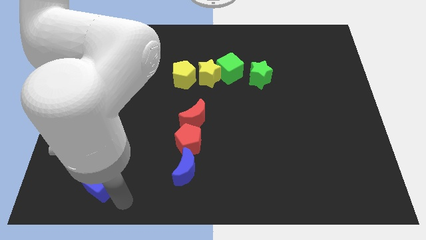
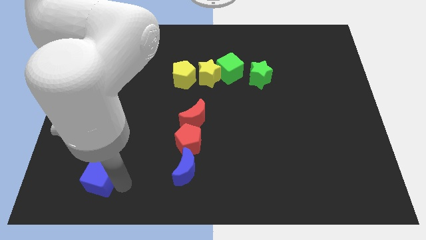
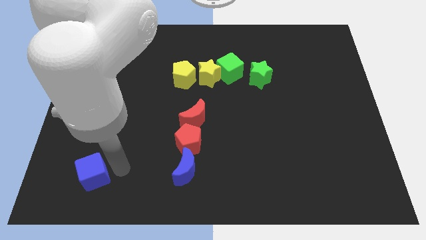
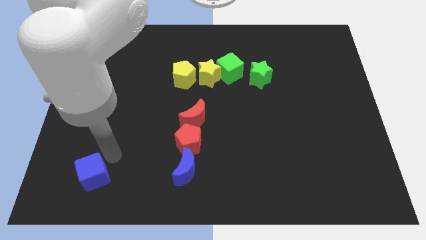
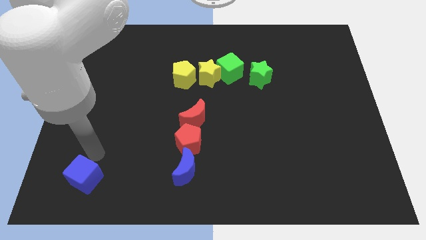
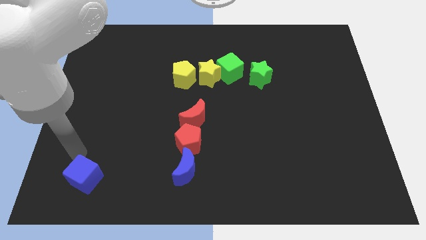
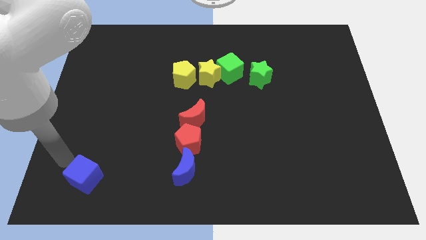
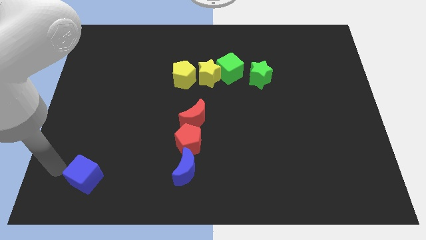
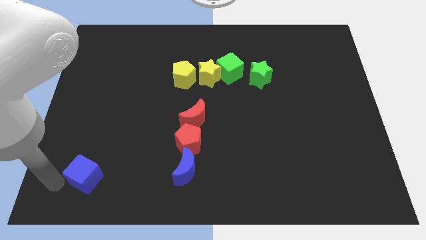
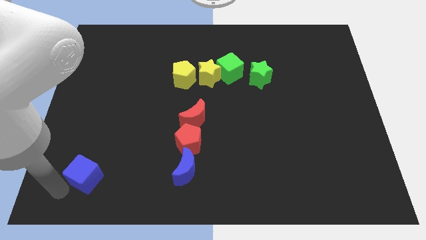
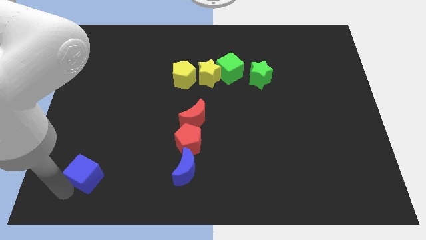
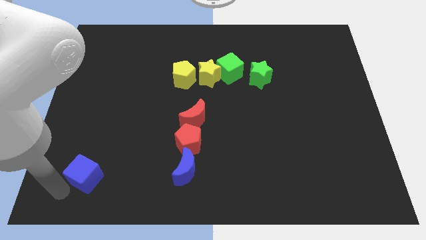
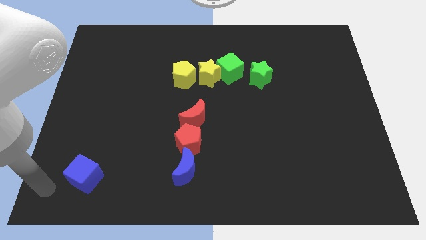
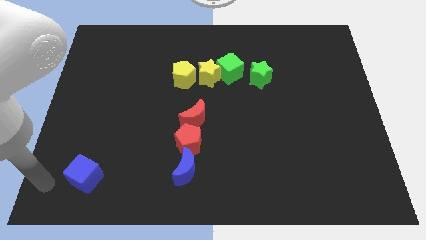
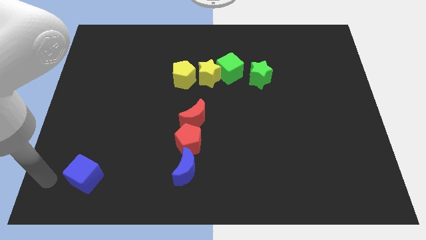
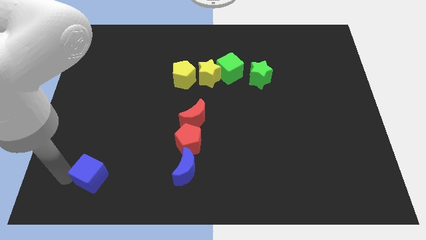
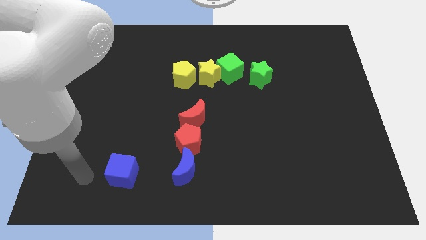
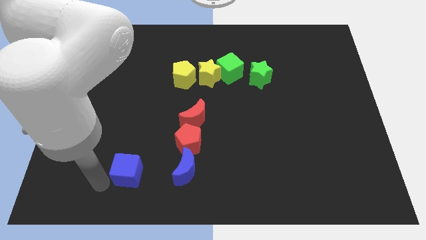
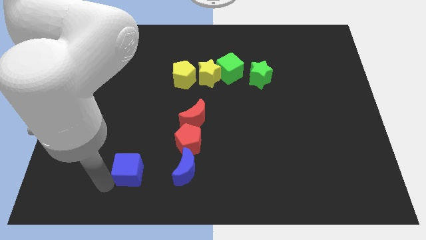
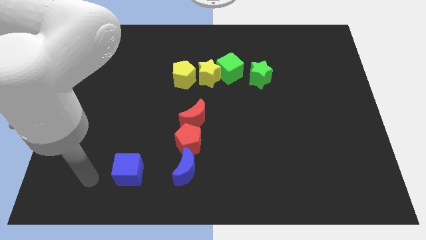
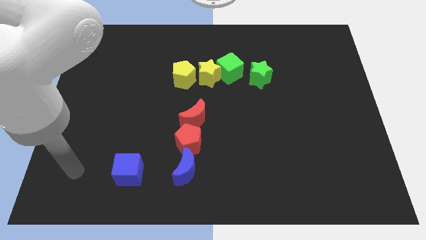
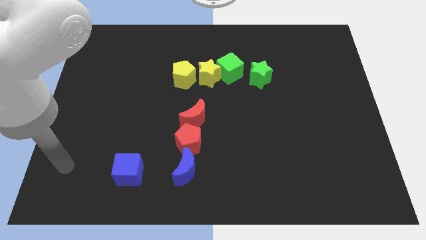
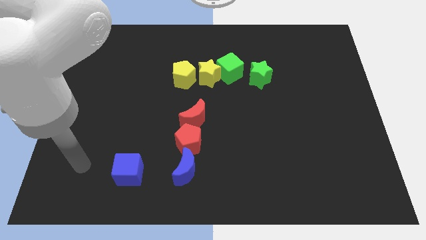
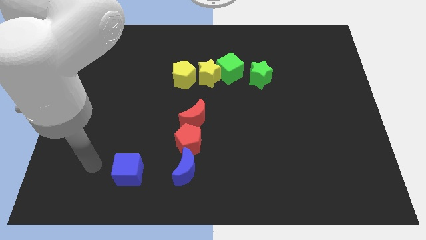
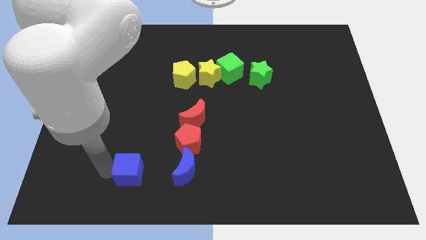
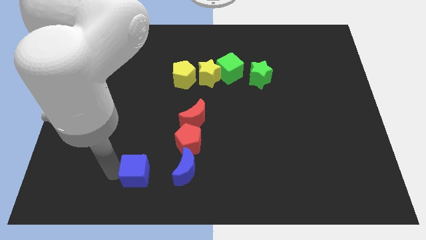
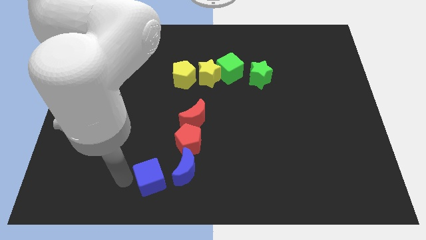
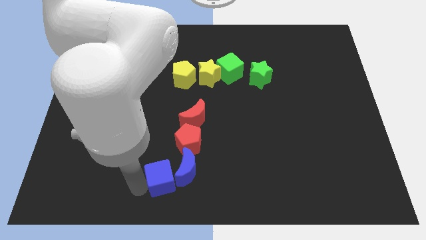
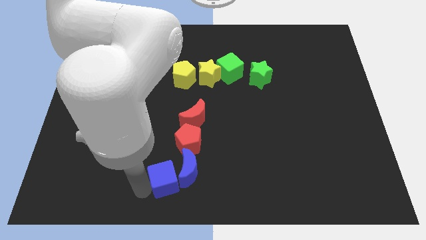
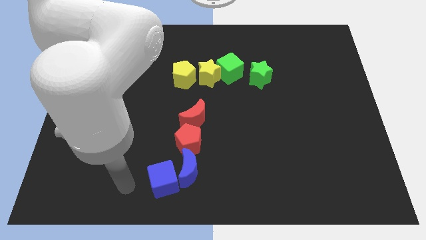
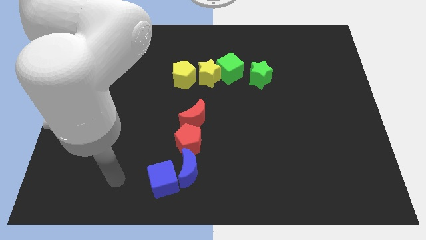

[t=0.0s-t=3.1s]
push the blue cube to the left of the blue crescent

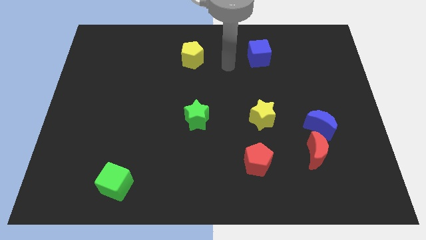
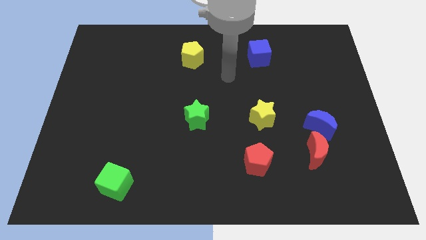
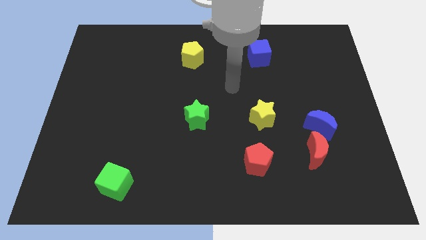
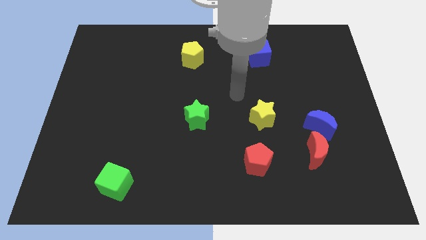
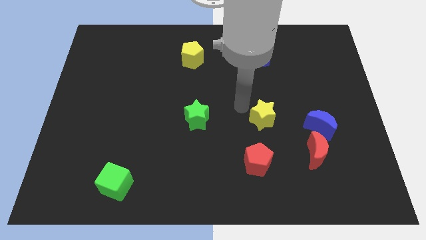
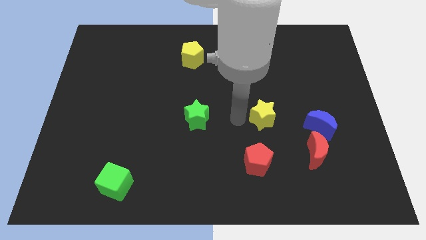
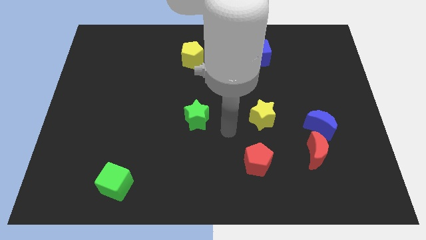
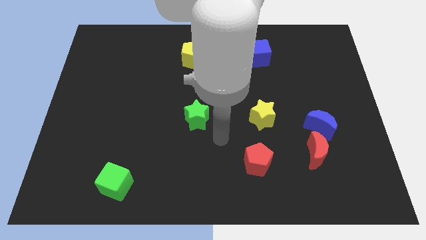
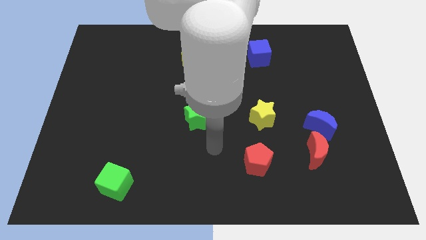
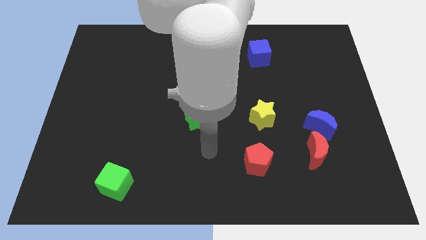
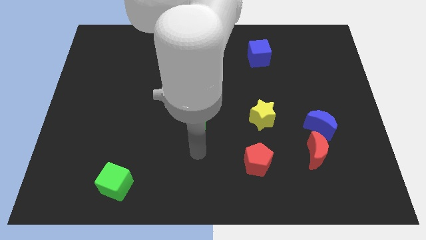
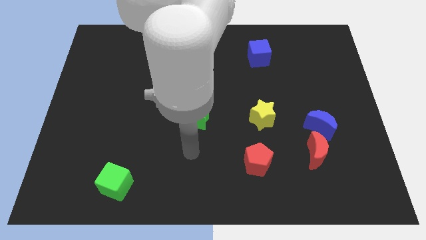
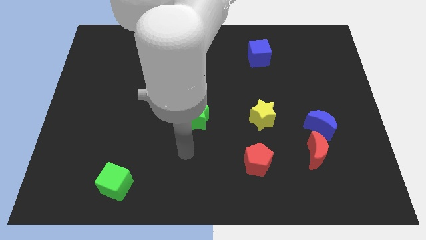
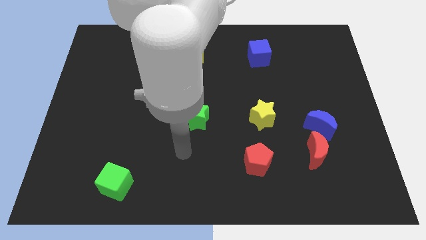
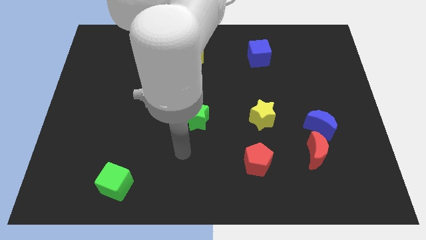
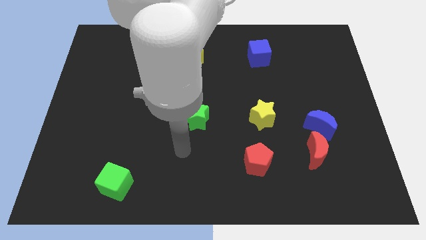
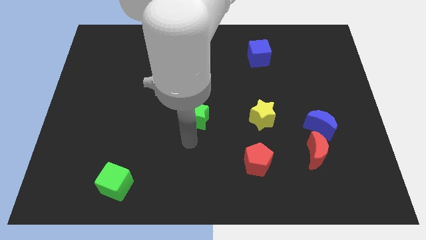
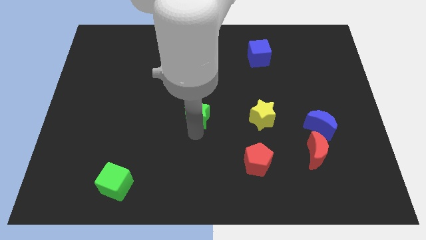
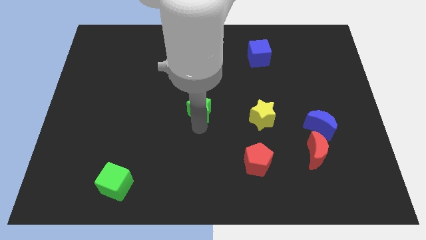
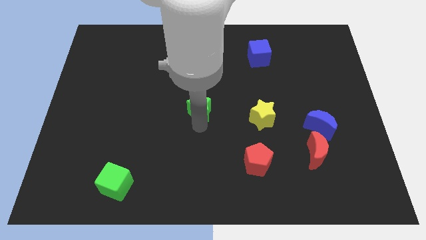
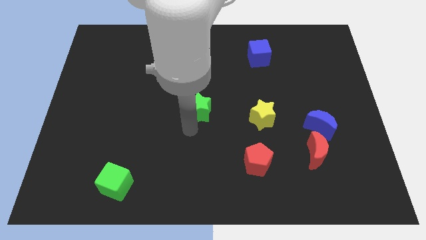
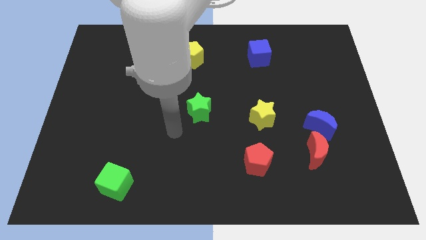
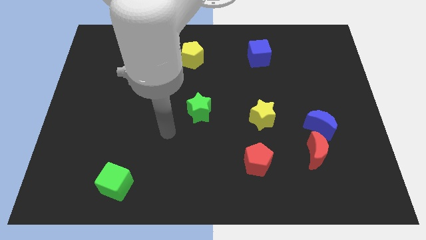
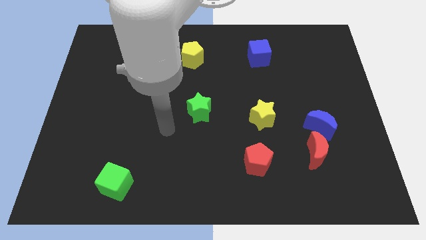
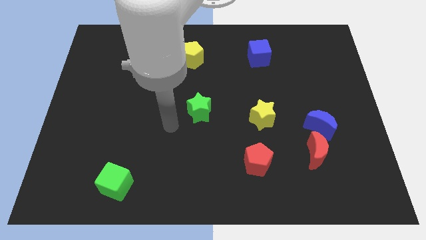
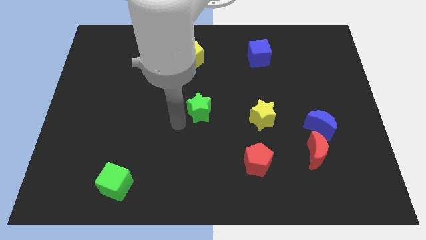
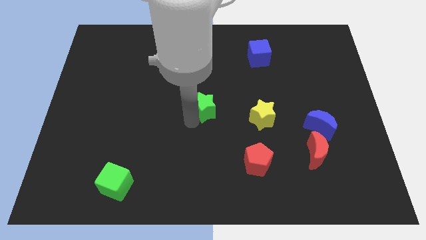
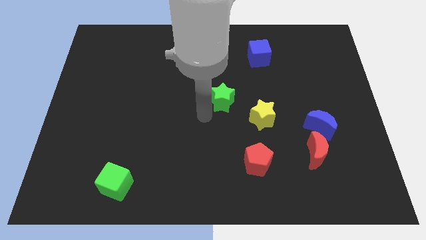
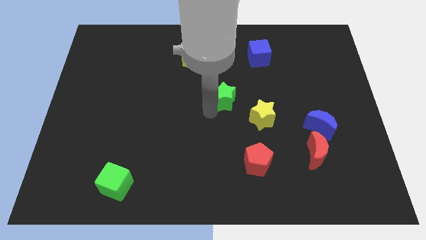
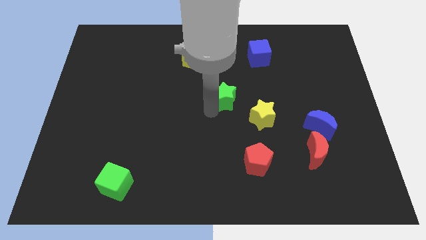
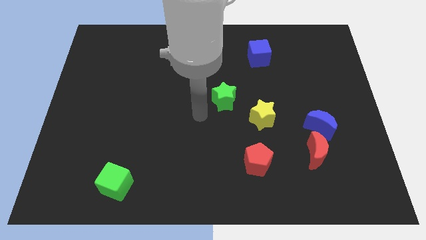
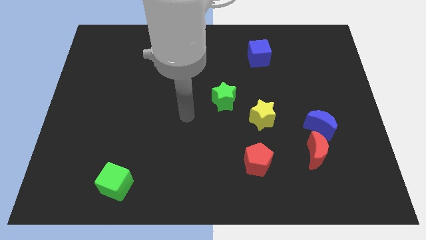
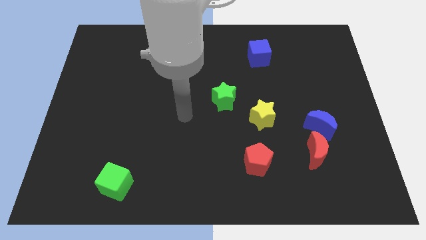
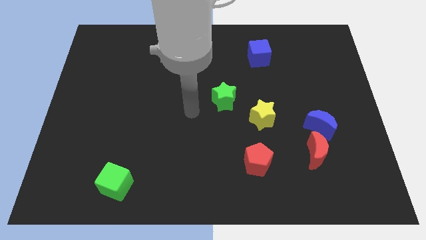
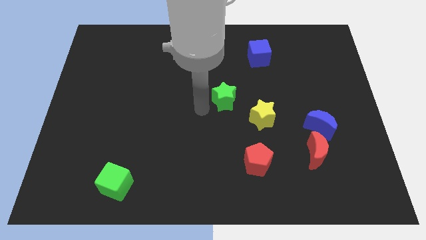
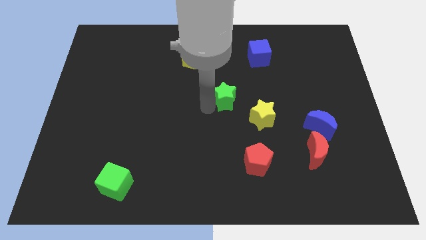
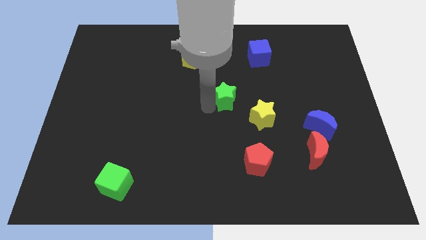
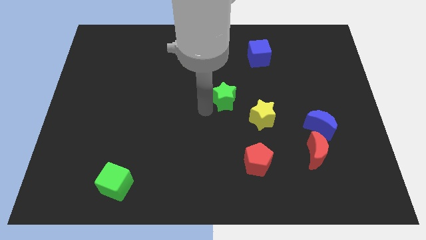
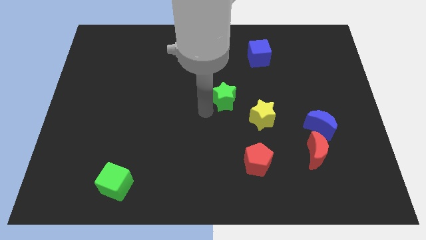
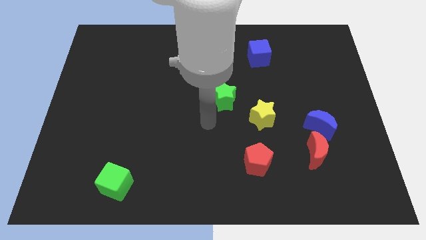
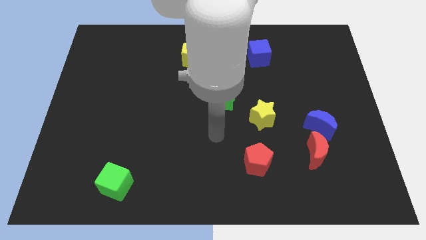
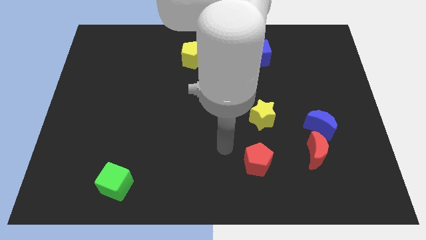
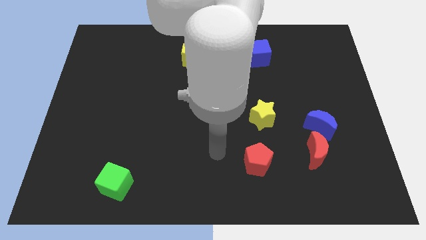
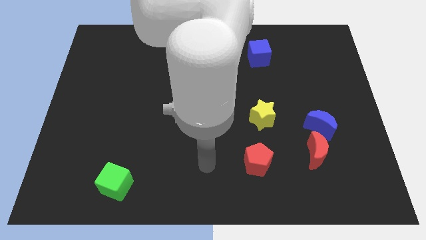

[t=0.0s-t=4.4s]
slide the green star diagonally top left to the yellow star

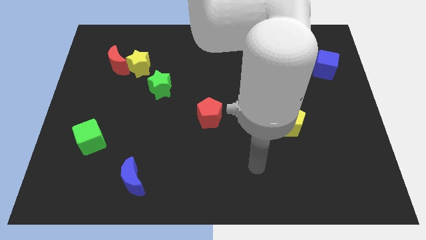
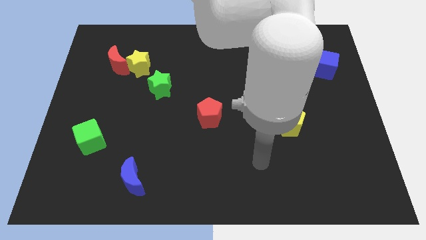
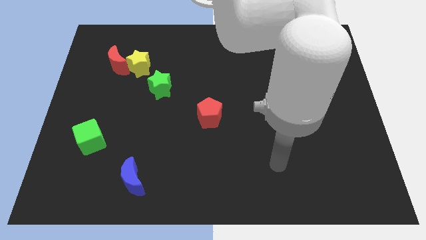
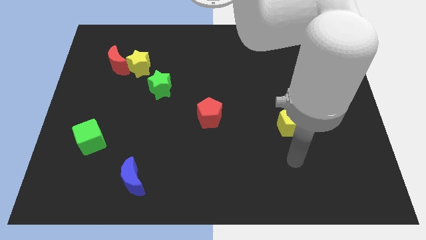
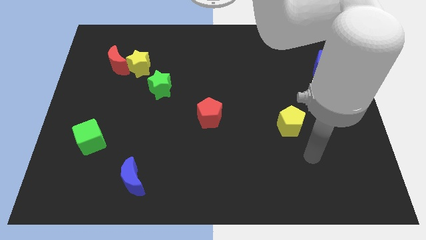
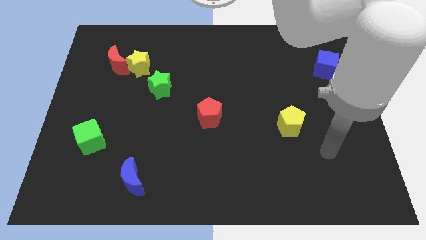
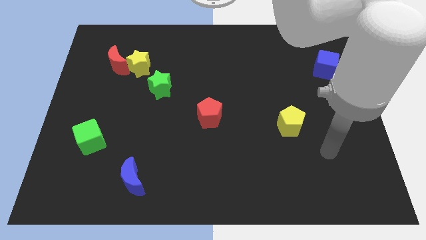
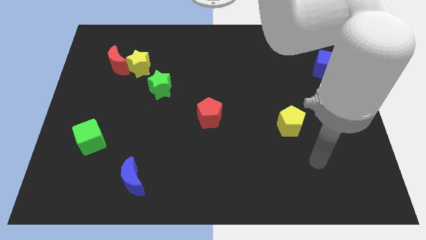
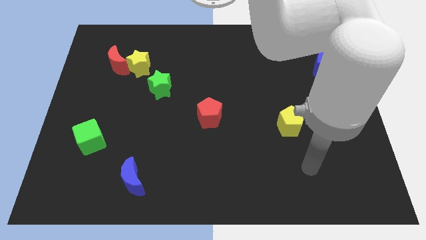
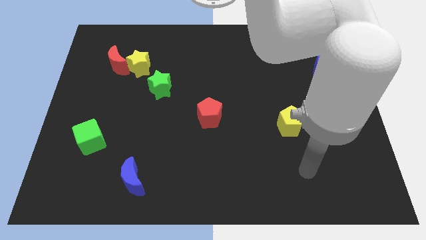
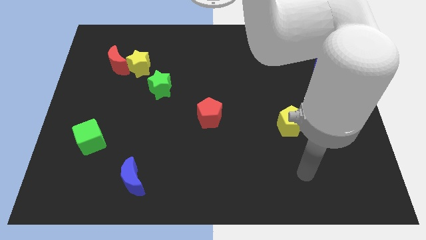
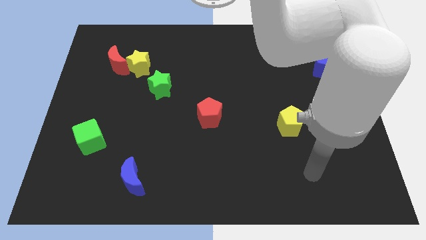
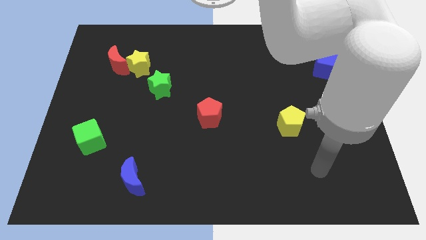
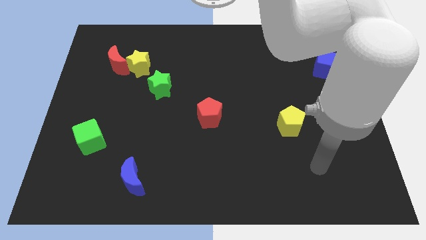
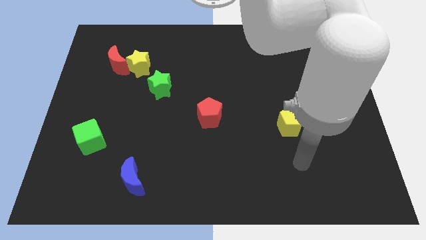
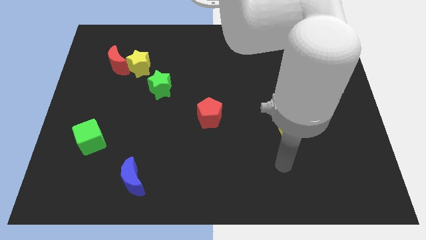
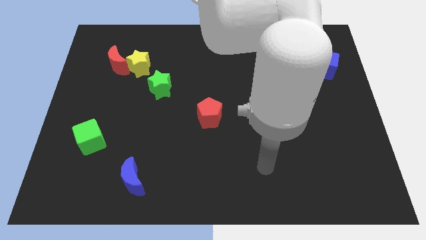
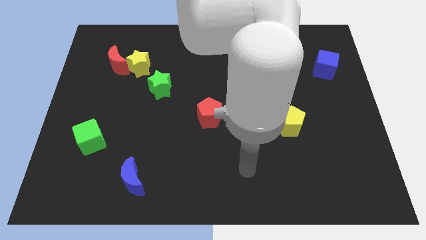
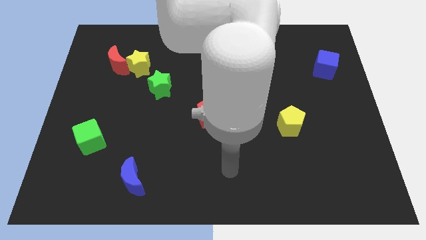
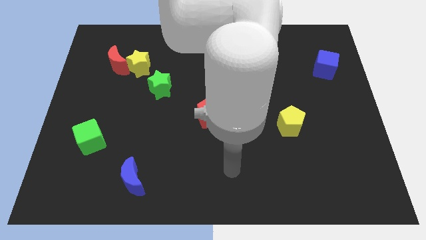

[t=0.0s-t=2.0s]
point the arm to the right of the blue moon
